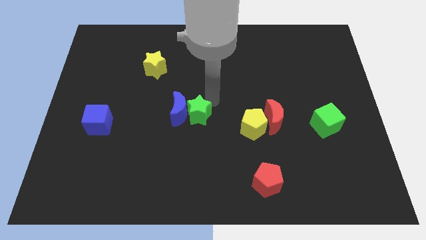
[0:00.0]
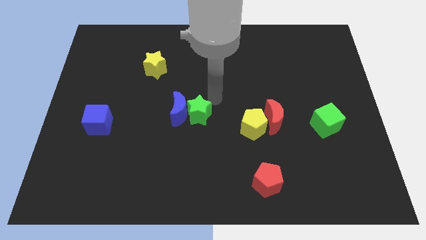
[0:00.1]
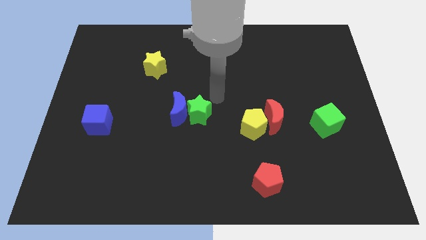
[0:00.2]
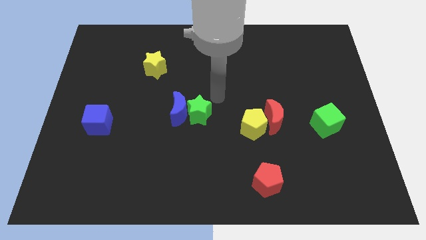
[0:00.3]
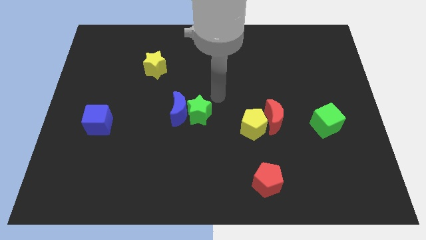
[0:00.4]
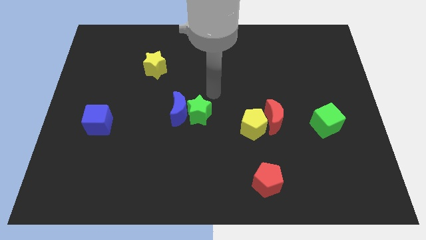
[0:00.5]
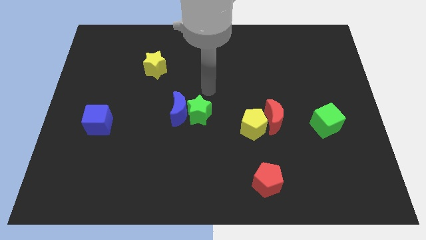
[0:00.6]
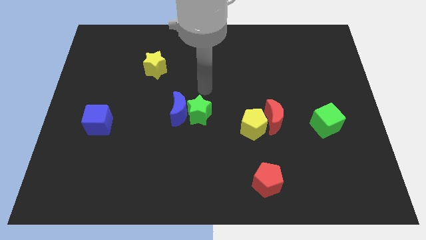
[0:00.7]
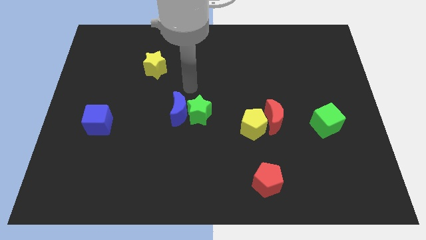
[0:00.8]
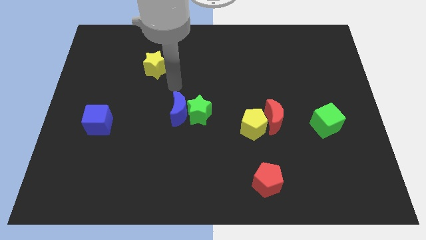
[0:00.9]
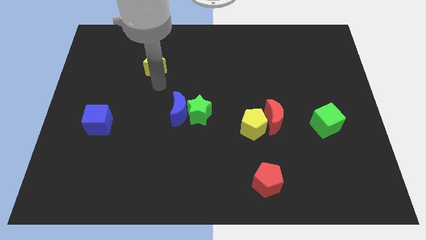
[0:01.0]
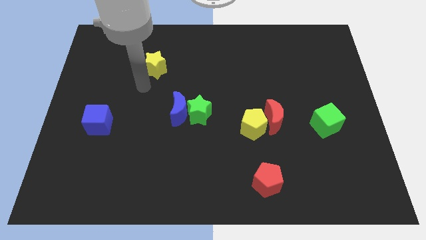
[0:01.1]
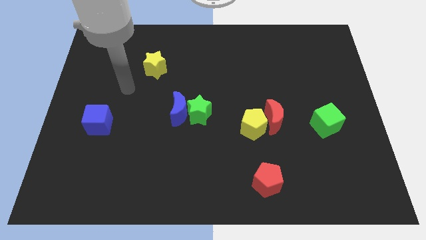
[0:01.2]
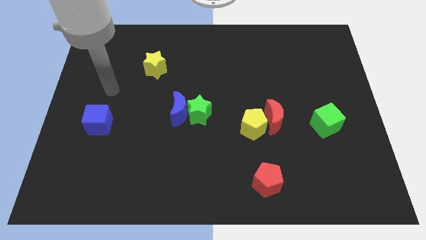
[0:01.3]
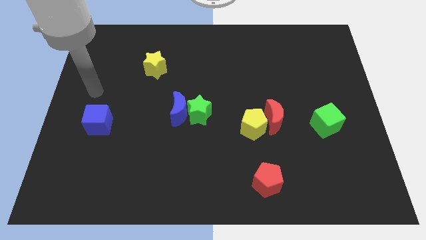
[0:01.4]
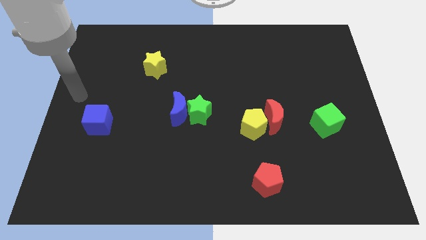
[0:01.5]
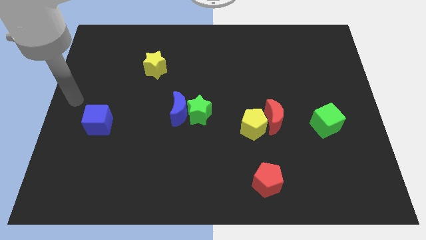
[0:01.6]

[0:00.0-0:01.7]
move your arm away from the green star

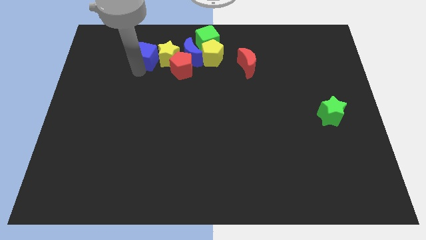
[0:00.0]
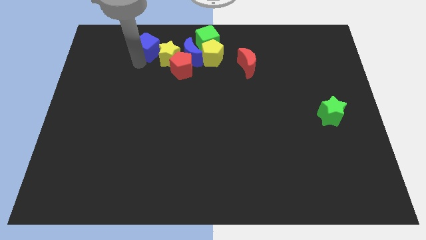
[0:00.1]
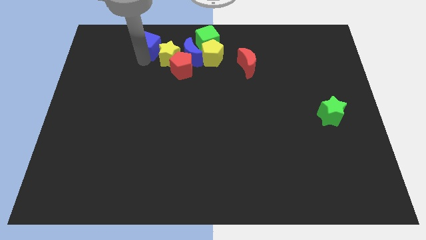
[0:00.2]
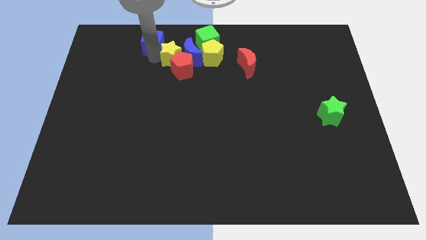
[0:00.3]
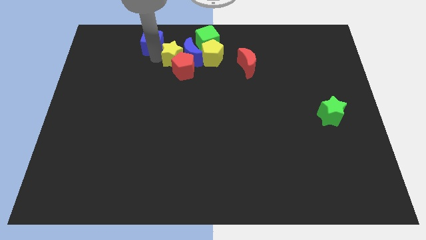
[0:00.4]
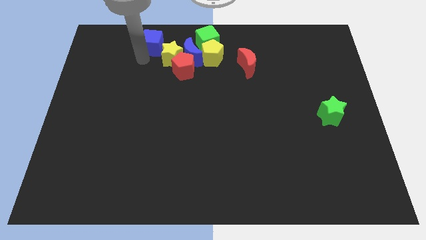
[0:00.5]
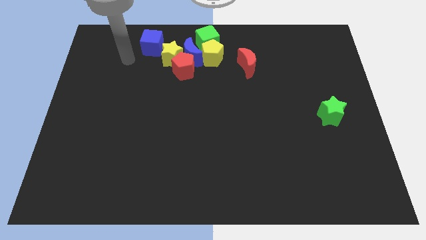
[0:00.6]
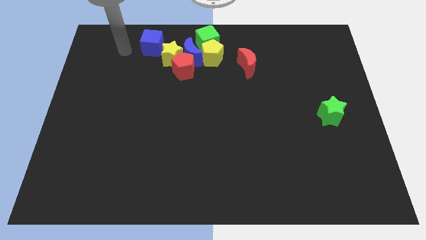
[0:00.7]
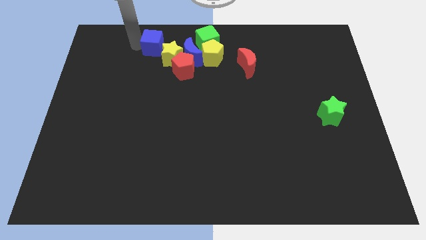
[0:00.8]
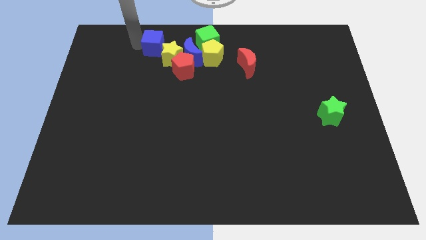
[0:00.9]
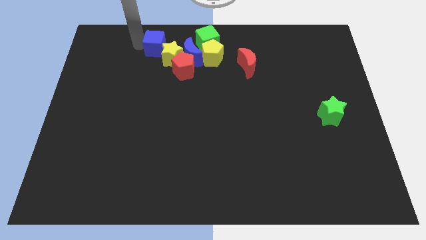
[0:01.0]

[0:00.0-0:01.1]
move the blue cube to the top left of the yellow star

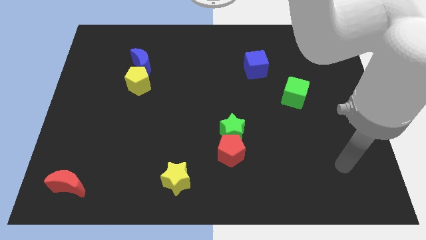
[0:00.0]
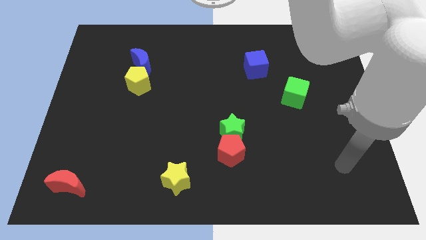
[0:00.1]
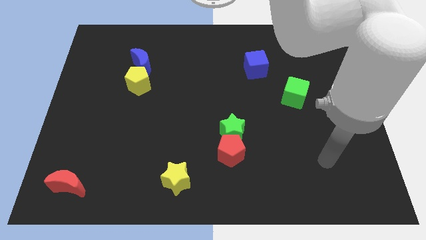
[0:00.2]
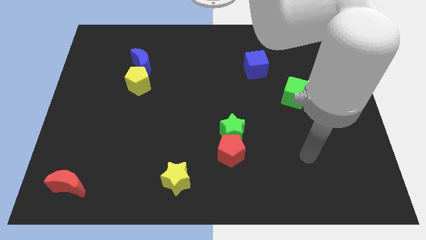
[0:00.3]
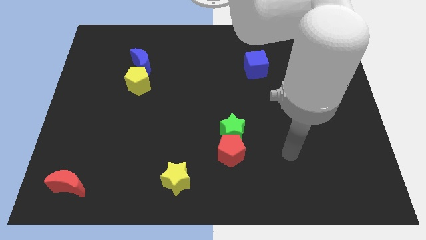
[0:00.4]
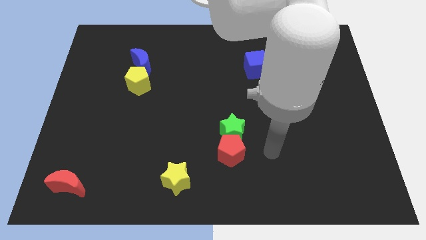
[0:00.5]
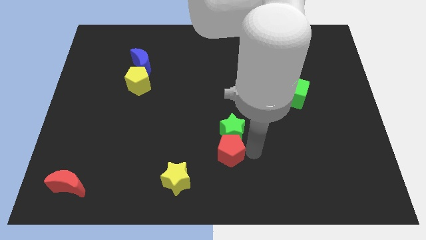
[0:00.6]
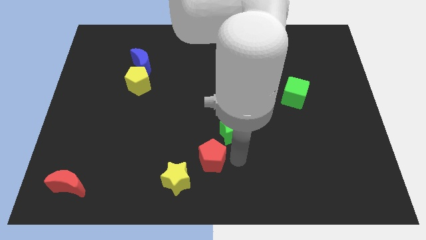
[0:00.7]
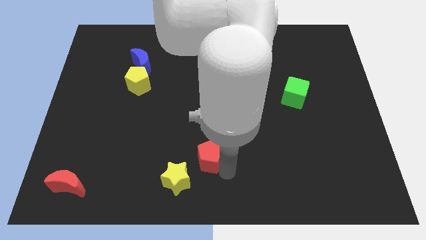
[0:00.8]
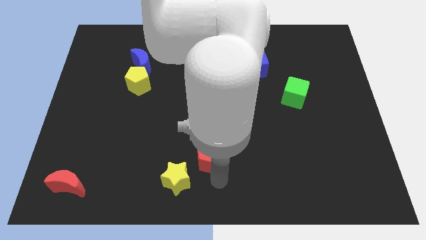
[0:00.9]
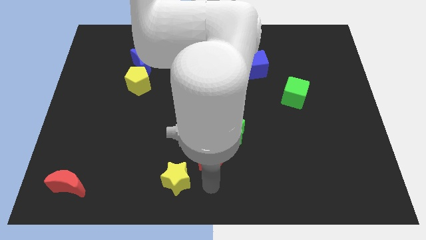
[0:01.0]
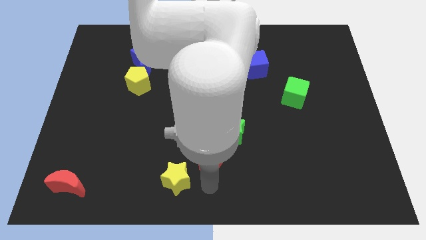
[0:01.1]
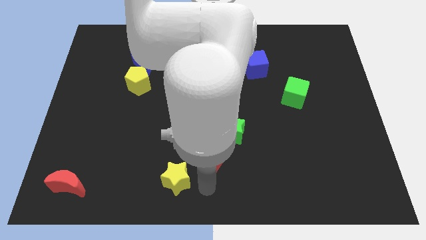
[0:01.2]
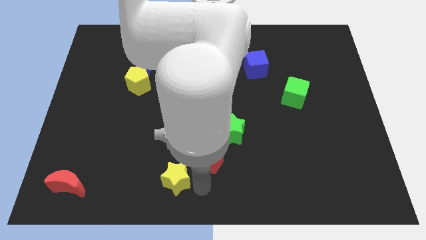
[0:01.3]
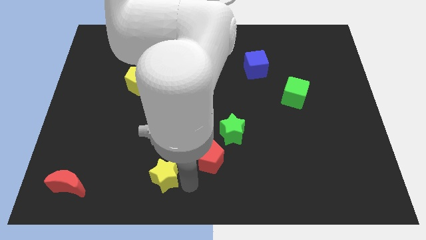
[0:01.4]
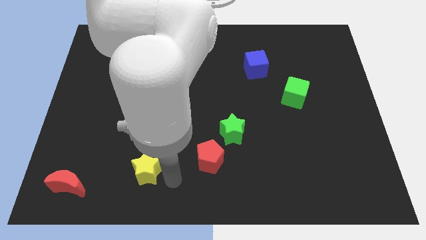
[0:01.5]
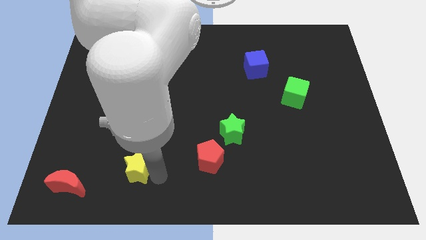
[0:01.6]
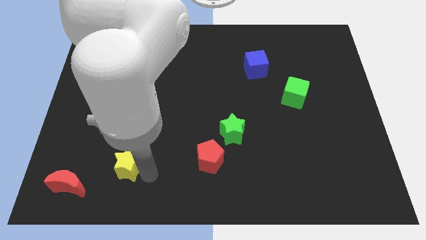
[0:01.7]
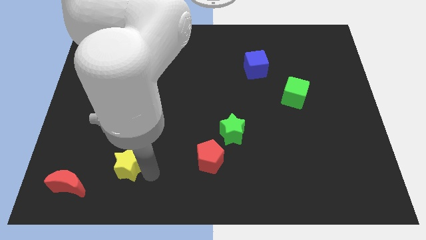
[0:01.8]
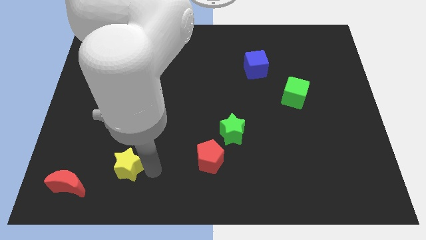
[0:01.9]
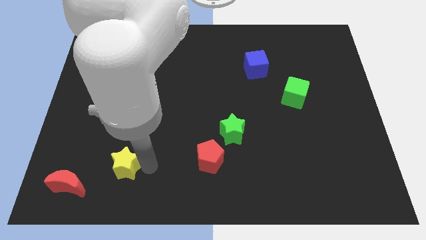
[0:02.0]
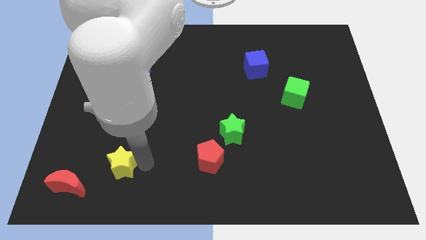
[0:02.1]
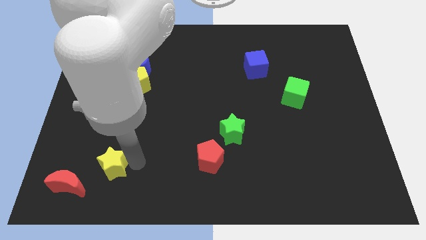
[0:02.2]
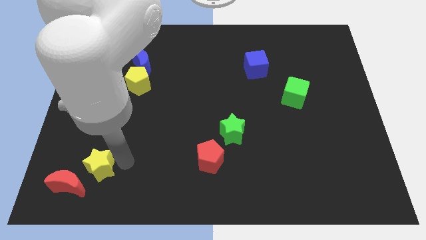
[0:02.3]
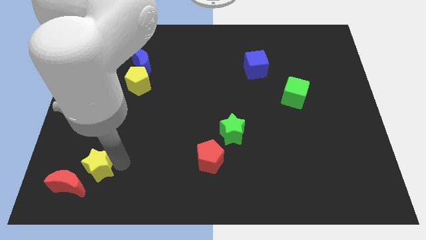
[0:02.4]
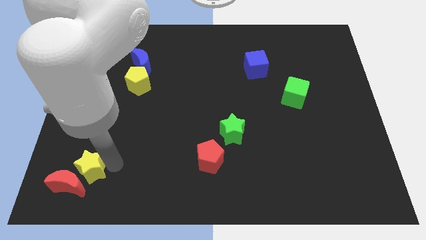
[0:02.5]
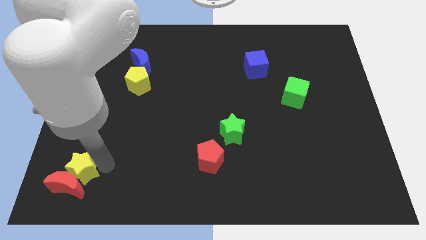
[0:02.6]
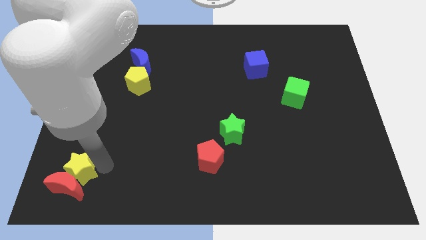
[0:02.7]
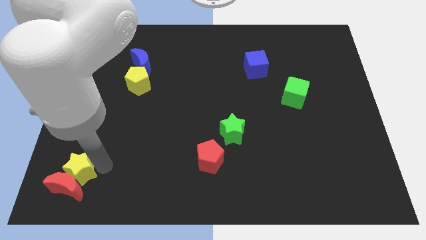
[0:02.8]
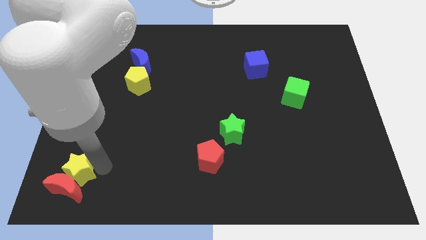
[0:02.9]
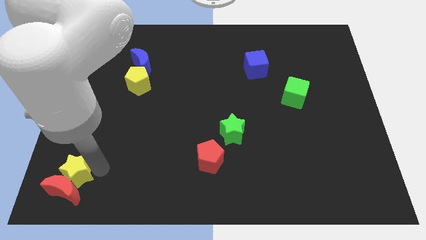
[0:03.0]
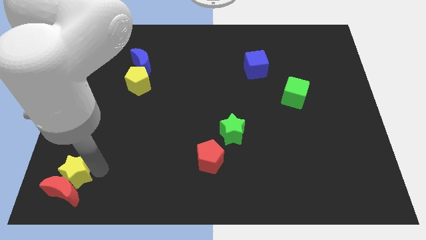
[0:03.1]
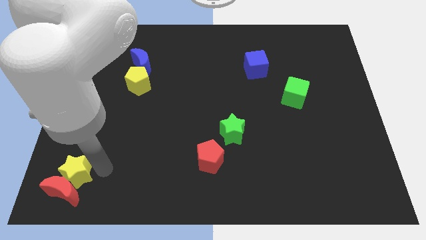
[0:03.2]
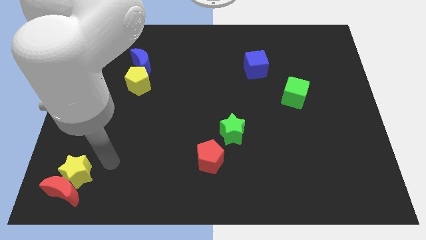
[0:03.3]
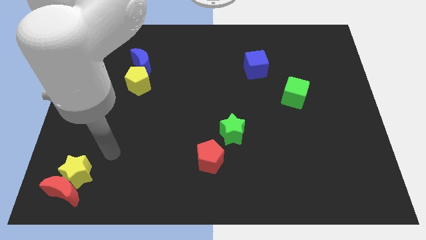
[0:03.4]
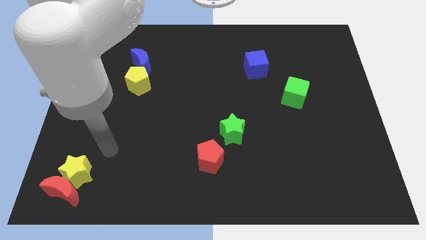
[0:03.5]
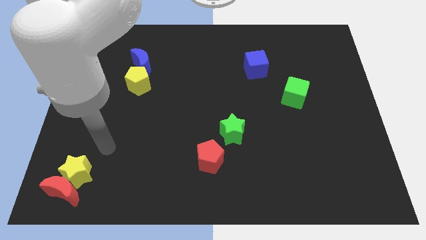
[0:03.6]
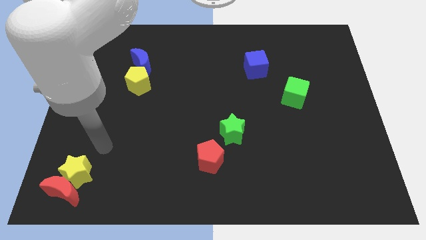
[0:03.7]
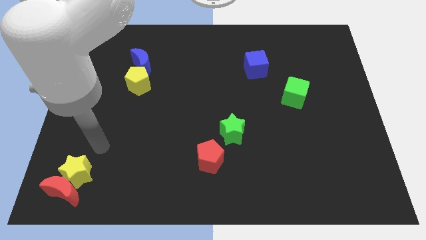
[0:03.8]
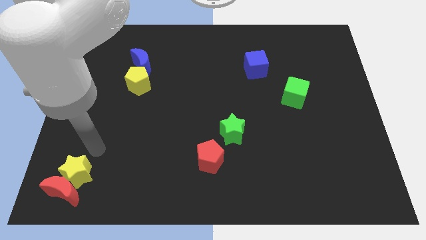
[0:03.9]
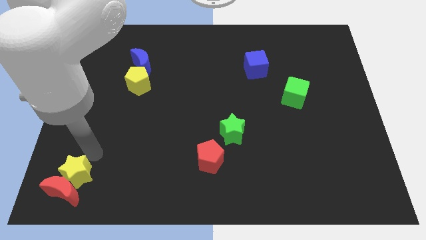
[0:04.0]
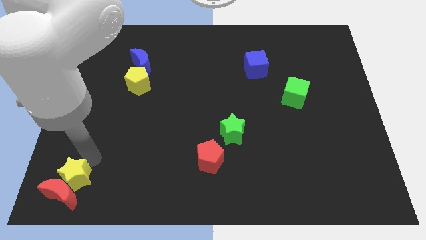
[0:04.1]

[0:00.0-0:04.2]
place yellow star on top of red moon

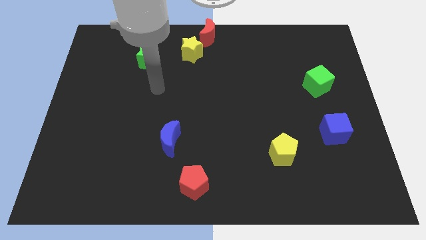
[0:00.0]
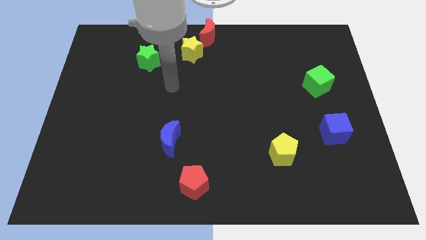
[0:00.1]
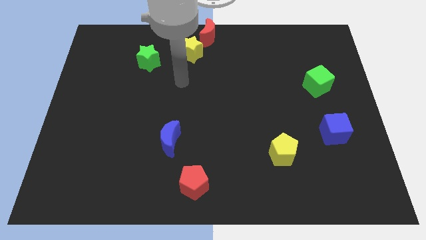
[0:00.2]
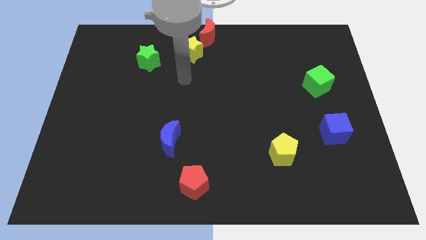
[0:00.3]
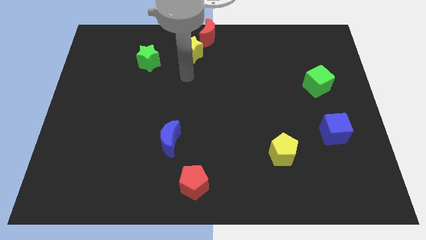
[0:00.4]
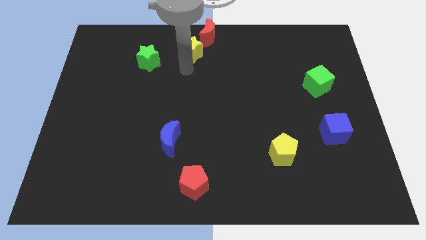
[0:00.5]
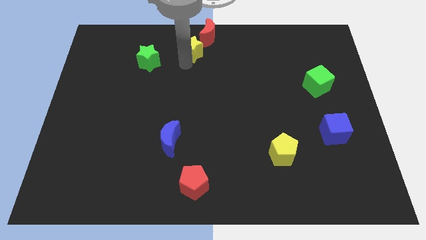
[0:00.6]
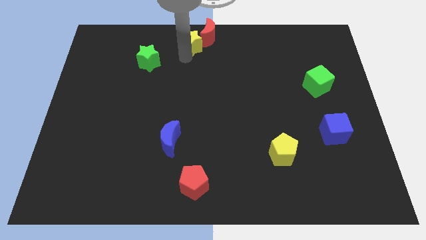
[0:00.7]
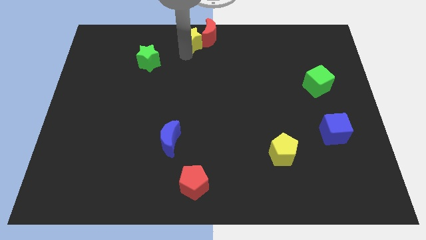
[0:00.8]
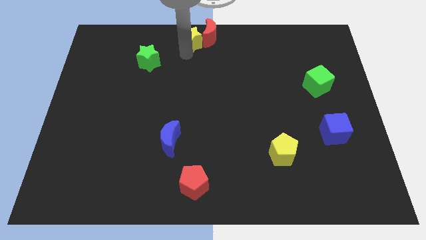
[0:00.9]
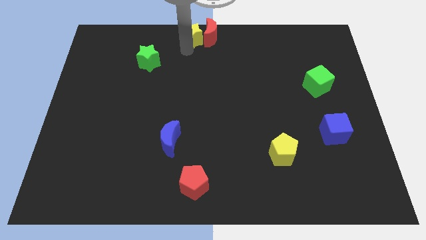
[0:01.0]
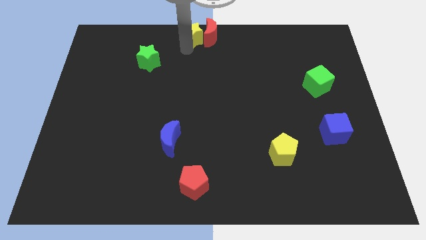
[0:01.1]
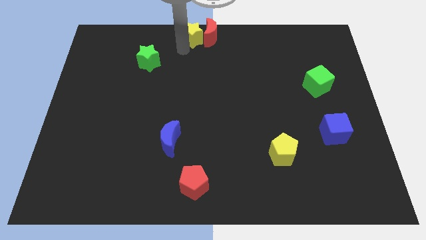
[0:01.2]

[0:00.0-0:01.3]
put the yellow star at the left of the red crescent

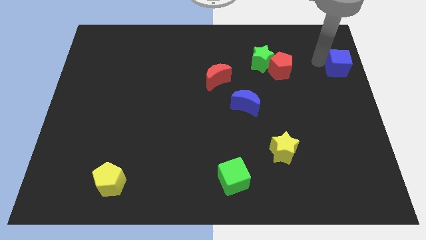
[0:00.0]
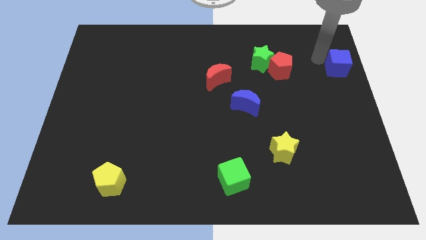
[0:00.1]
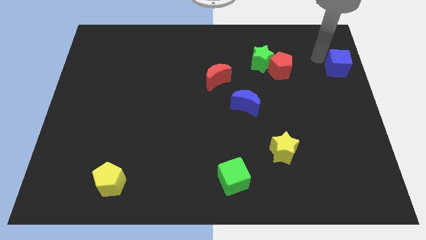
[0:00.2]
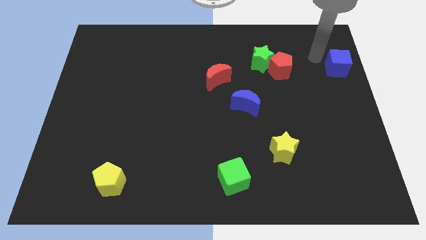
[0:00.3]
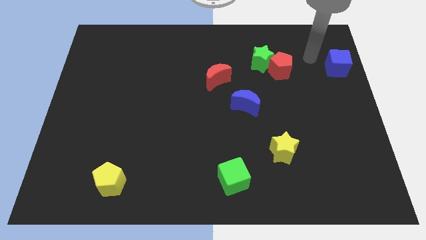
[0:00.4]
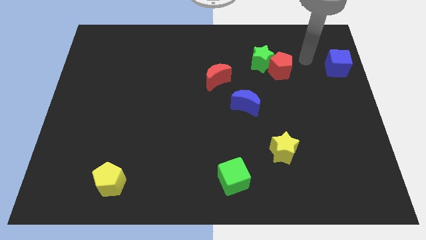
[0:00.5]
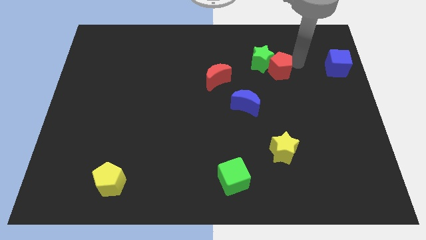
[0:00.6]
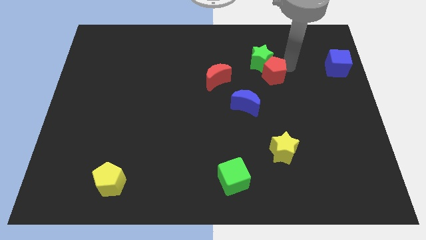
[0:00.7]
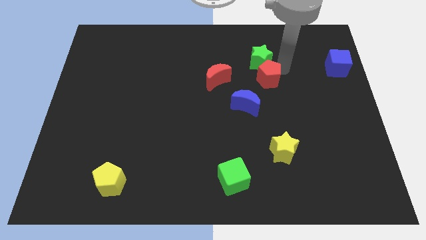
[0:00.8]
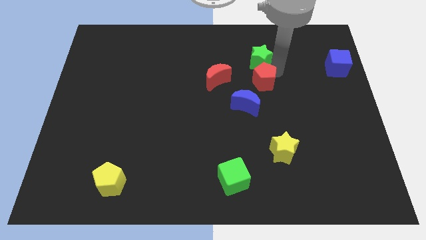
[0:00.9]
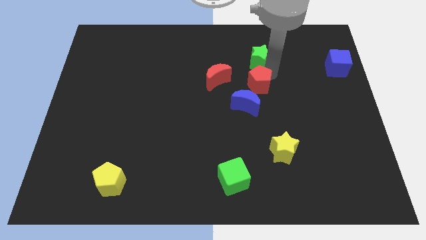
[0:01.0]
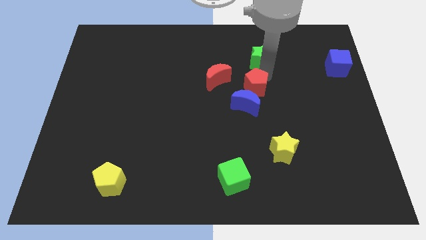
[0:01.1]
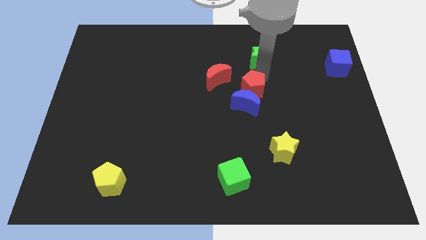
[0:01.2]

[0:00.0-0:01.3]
push the red pentagon close to the blue moon
